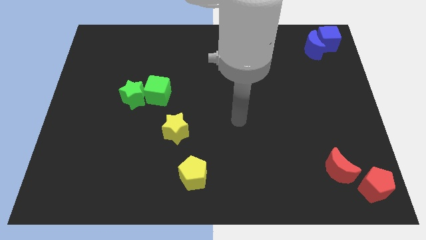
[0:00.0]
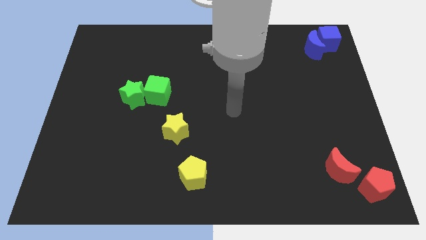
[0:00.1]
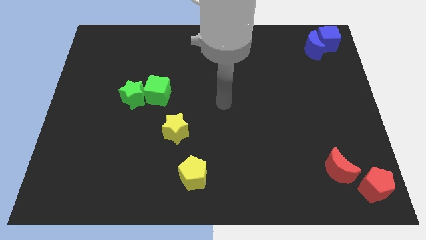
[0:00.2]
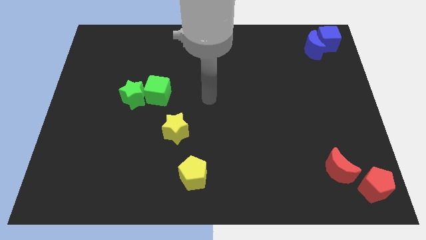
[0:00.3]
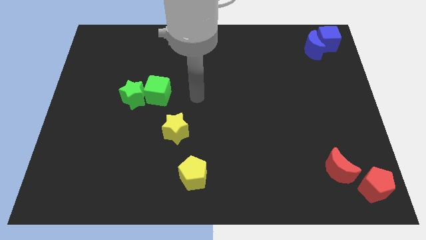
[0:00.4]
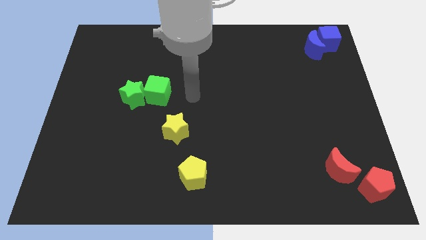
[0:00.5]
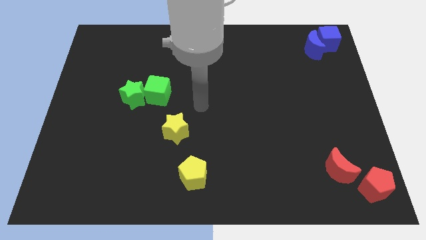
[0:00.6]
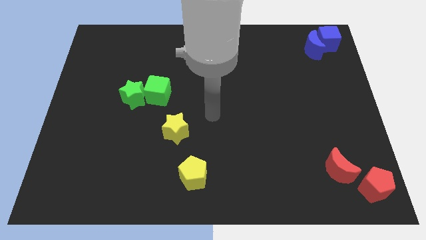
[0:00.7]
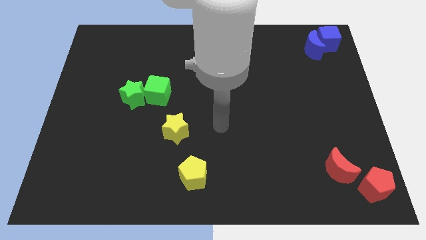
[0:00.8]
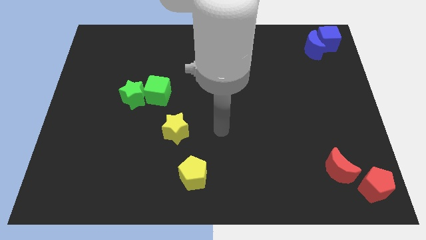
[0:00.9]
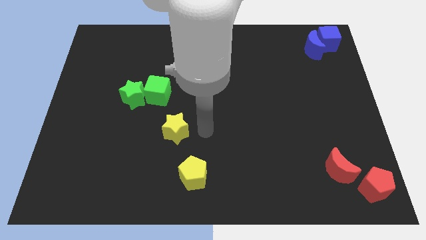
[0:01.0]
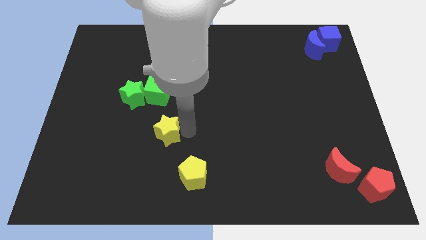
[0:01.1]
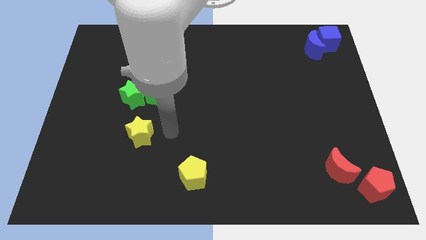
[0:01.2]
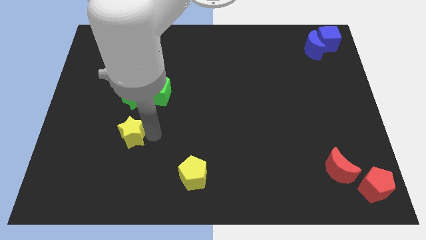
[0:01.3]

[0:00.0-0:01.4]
push yellow star below green star

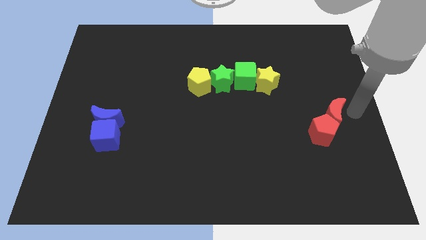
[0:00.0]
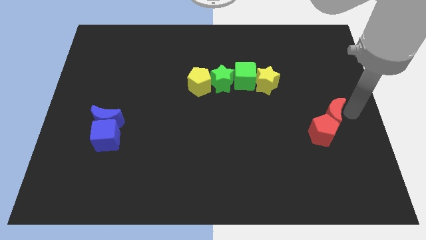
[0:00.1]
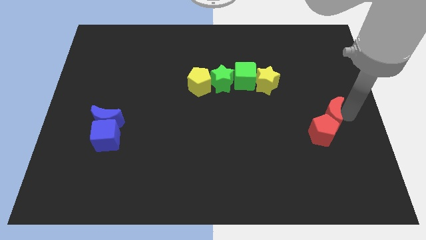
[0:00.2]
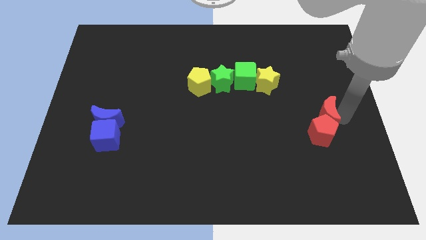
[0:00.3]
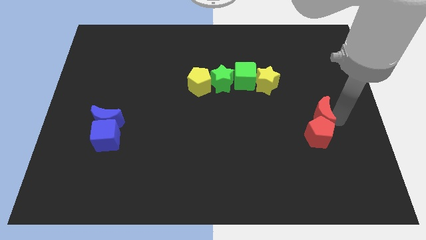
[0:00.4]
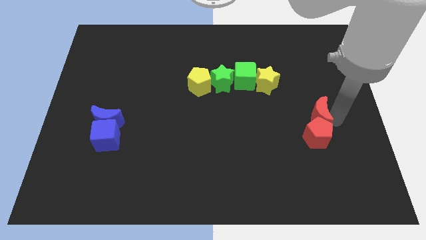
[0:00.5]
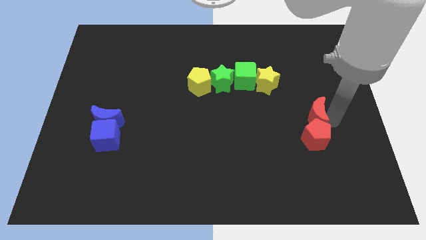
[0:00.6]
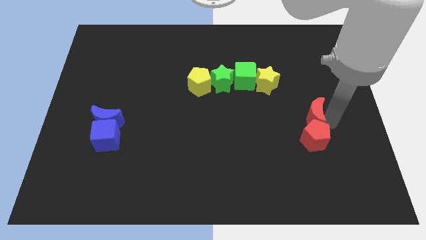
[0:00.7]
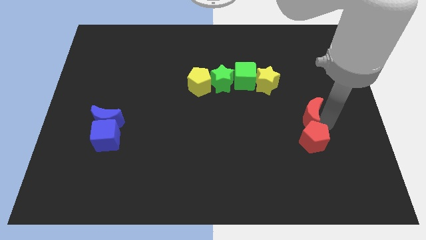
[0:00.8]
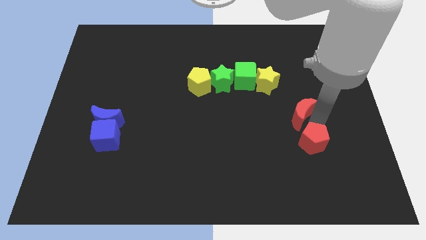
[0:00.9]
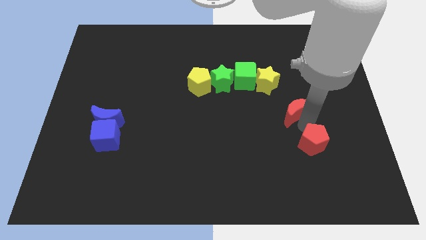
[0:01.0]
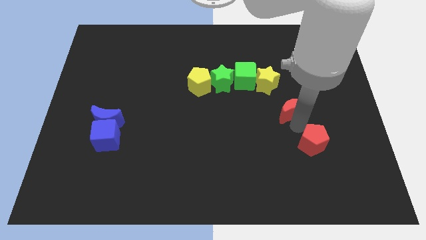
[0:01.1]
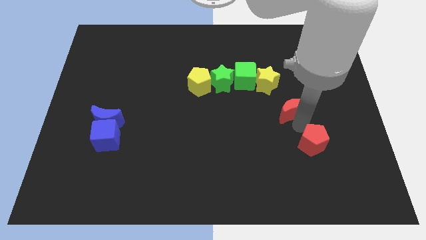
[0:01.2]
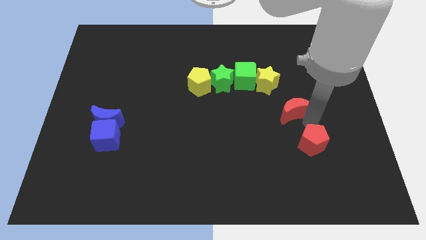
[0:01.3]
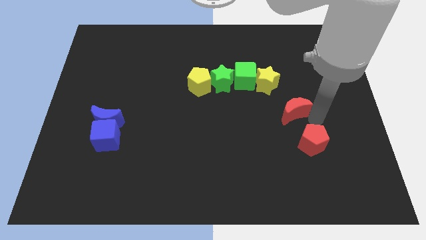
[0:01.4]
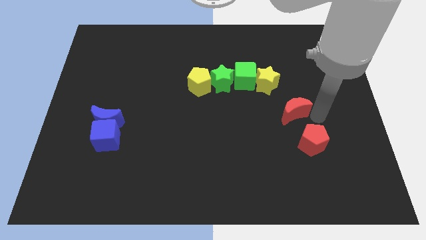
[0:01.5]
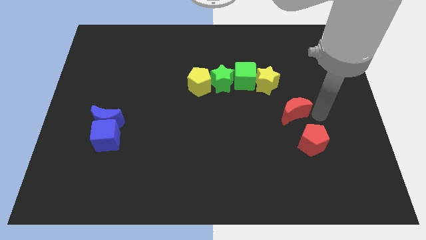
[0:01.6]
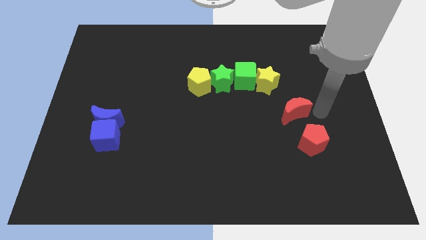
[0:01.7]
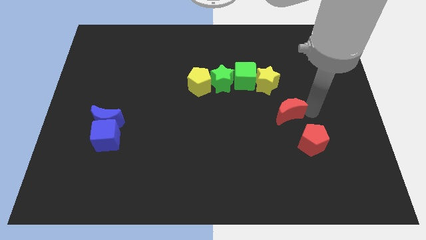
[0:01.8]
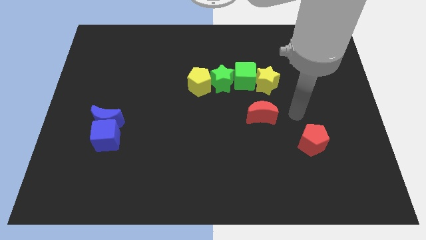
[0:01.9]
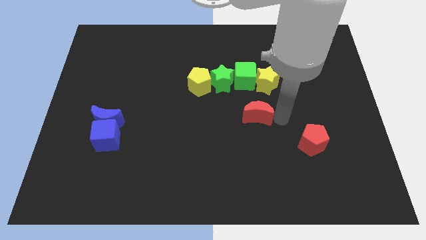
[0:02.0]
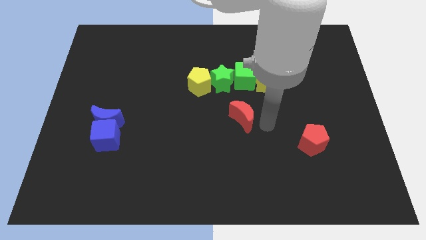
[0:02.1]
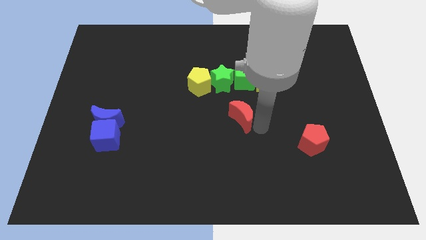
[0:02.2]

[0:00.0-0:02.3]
place the red crescent at the center of the board

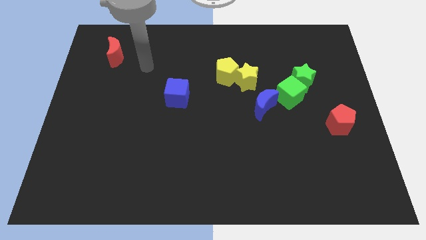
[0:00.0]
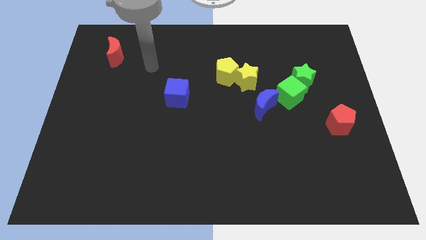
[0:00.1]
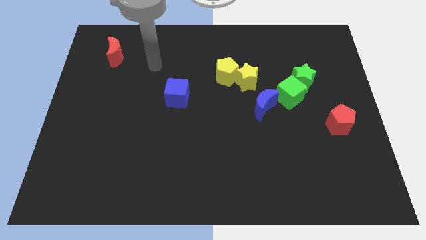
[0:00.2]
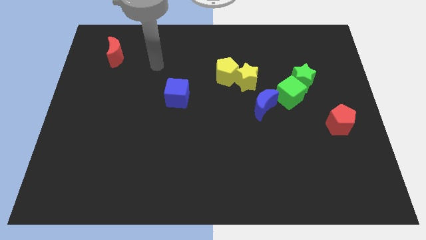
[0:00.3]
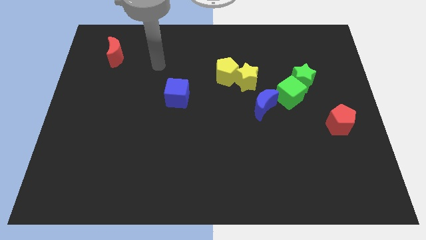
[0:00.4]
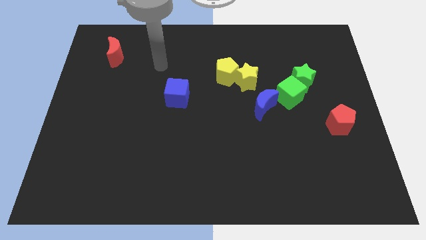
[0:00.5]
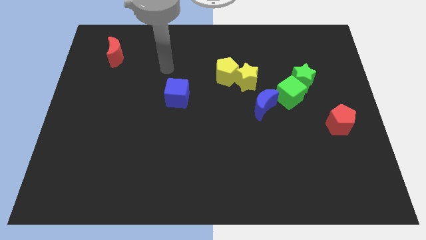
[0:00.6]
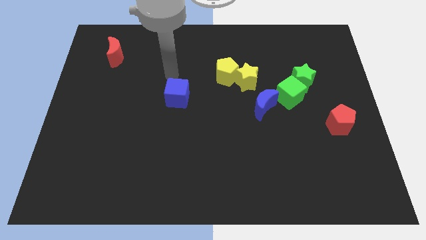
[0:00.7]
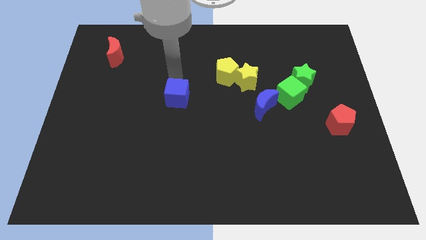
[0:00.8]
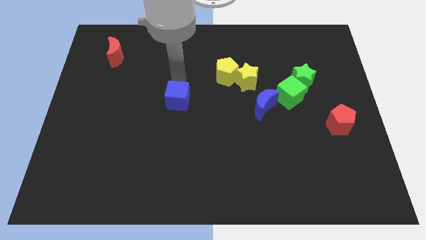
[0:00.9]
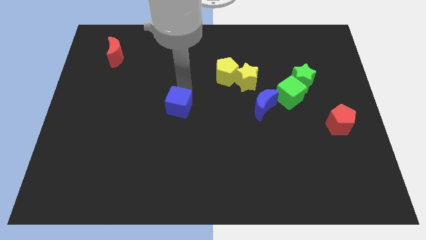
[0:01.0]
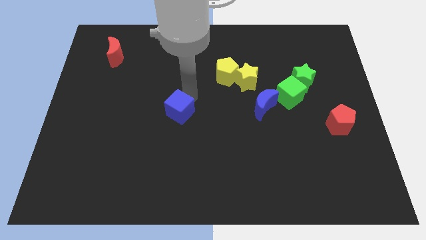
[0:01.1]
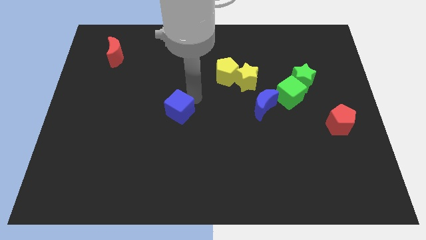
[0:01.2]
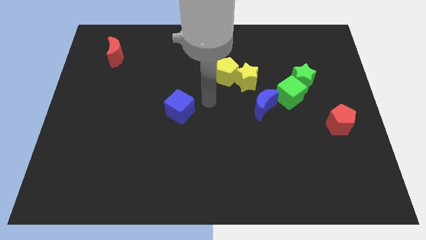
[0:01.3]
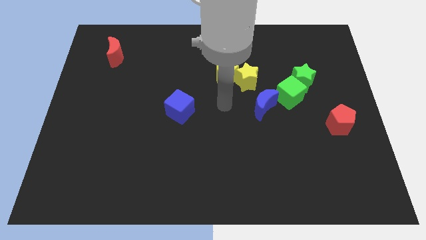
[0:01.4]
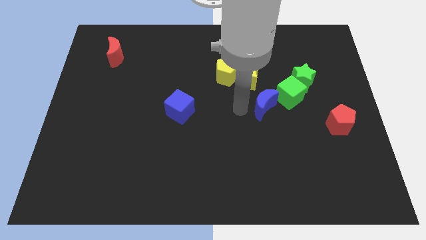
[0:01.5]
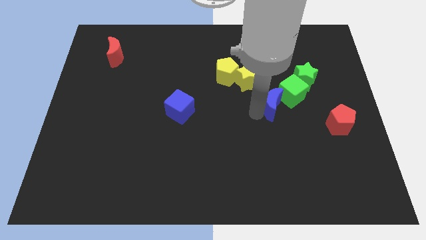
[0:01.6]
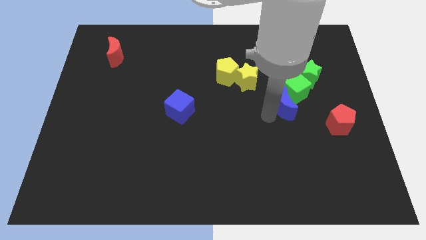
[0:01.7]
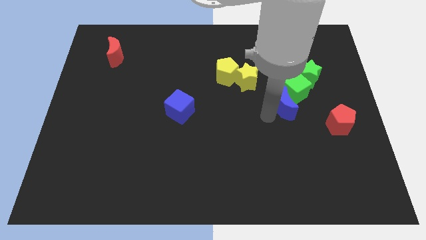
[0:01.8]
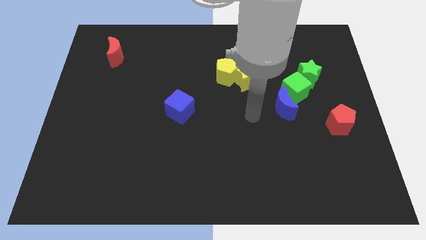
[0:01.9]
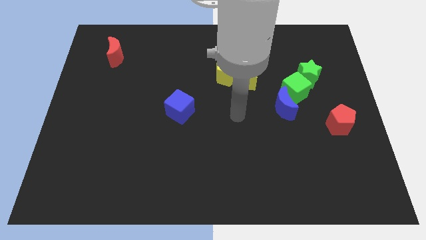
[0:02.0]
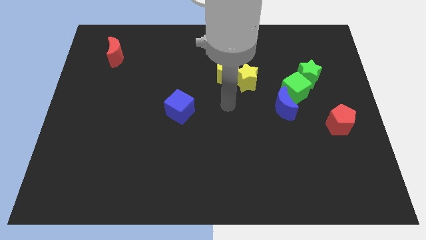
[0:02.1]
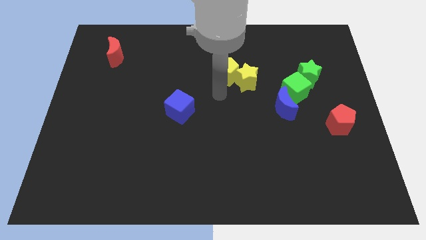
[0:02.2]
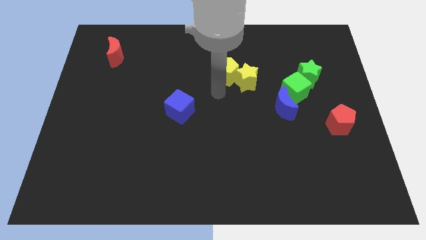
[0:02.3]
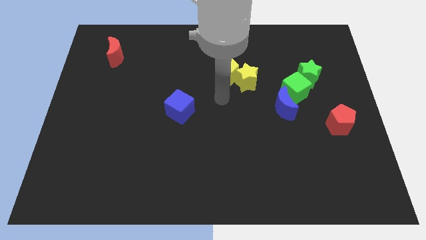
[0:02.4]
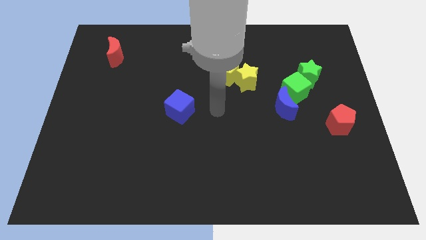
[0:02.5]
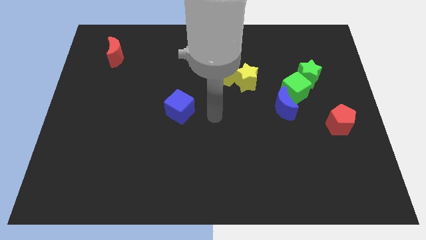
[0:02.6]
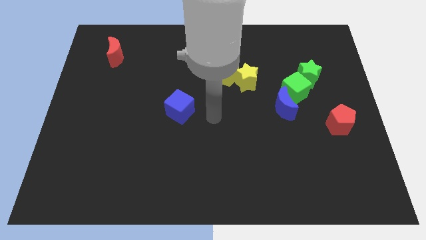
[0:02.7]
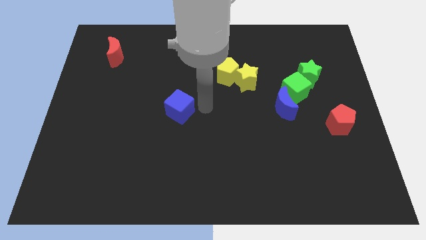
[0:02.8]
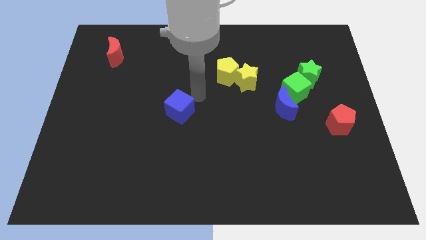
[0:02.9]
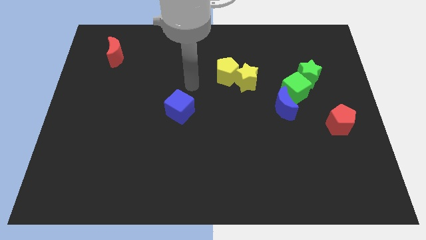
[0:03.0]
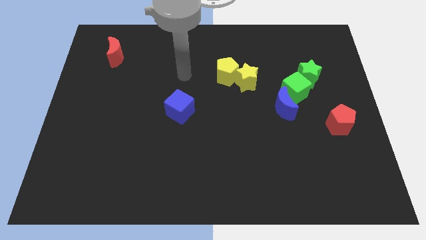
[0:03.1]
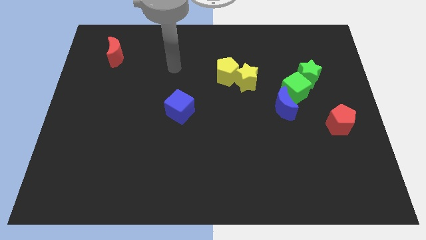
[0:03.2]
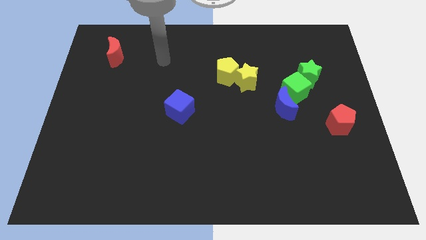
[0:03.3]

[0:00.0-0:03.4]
push the blue blocks at the center

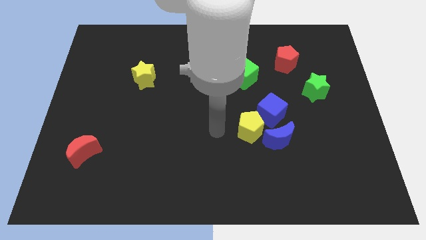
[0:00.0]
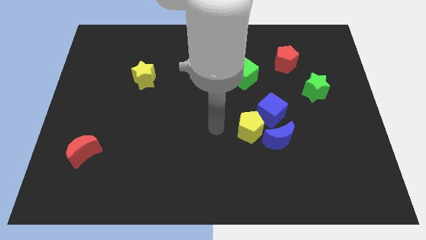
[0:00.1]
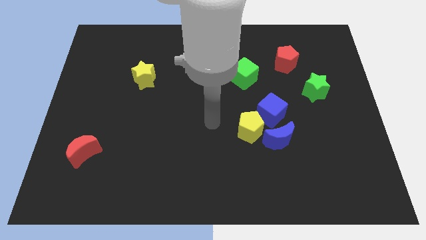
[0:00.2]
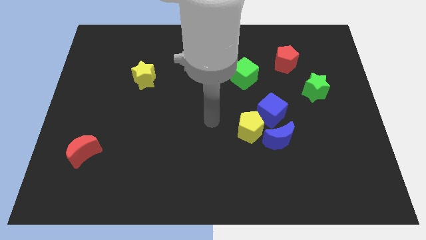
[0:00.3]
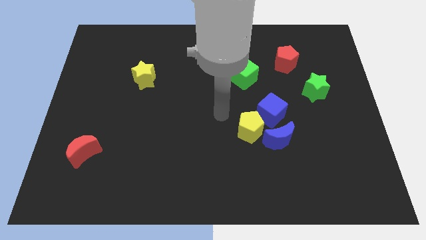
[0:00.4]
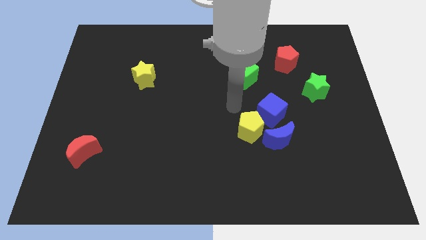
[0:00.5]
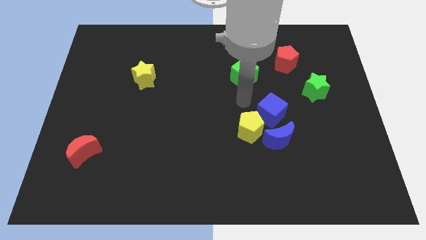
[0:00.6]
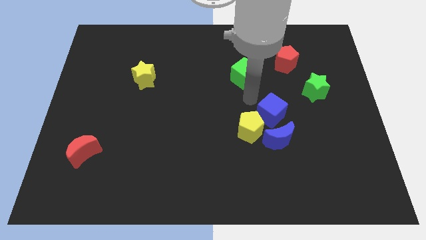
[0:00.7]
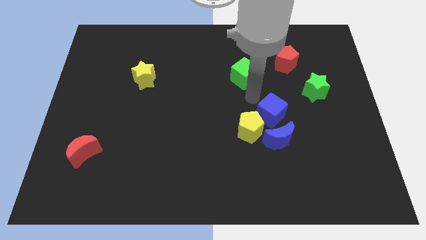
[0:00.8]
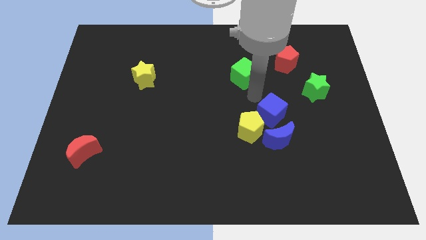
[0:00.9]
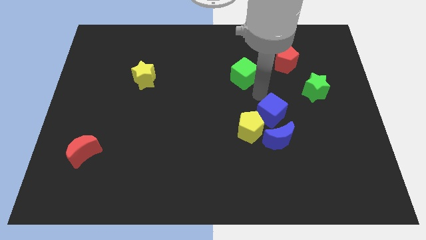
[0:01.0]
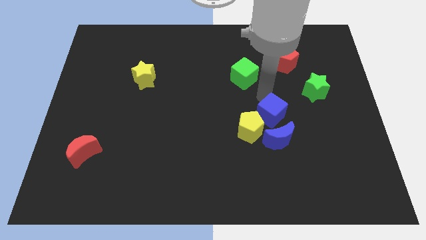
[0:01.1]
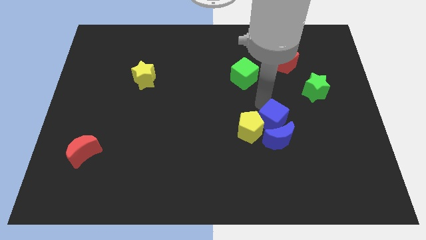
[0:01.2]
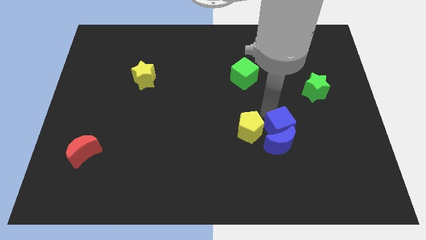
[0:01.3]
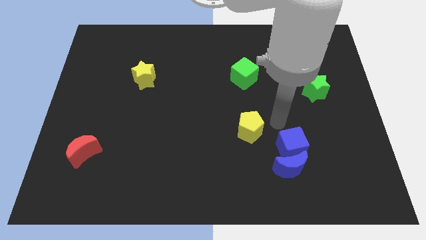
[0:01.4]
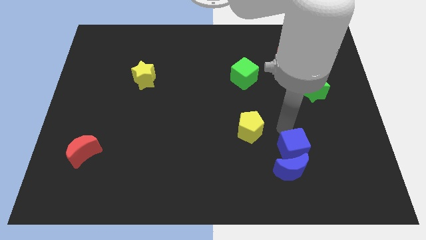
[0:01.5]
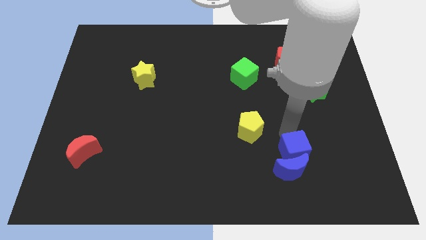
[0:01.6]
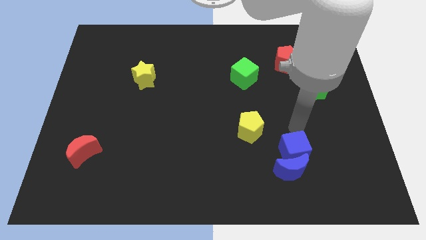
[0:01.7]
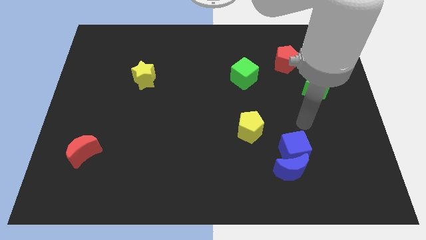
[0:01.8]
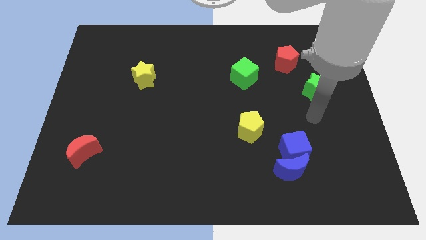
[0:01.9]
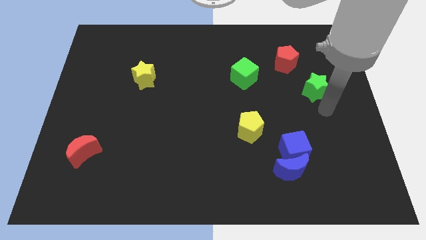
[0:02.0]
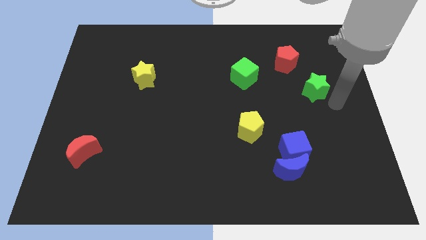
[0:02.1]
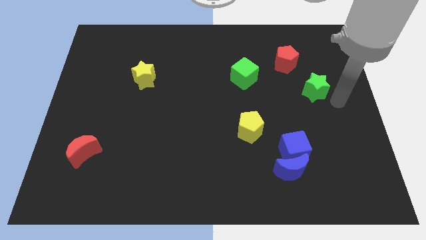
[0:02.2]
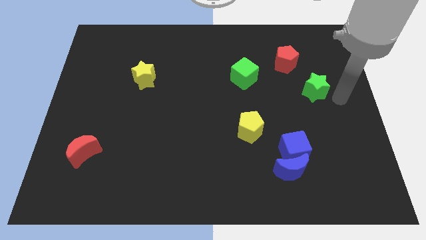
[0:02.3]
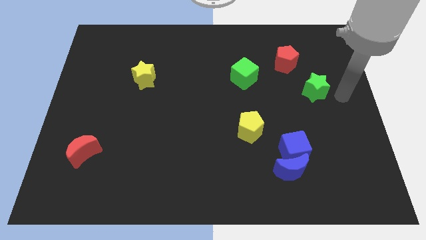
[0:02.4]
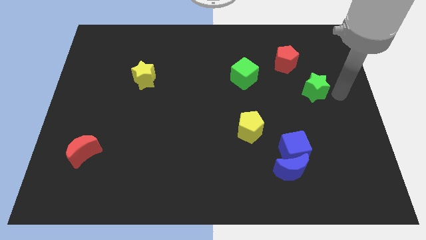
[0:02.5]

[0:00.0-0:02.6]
move the blue blocks slightly down
